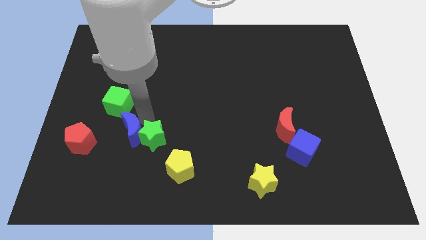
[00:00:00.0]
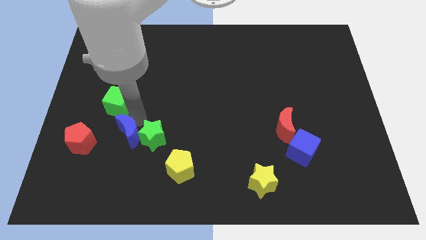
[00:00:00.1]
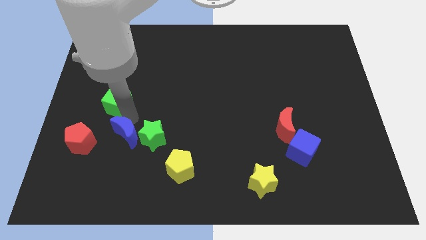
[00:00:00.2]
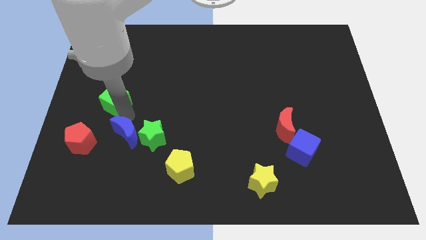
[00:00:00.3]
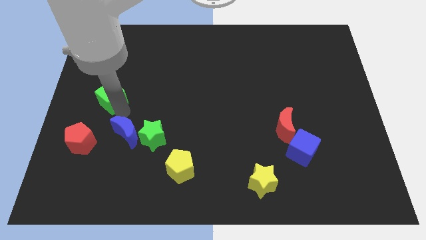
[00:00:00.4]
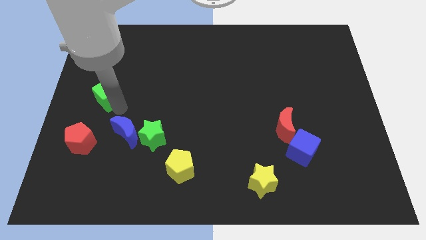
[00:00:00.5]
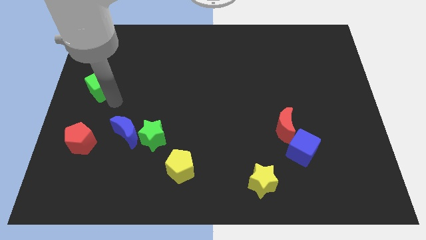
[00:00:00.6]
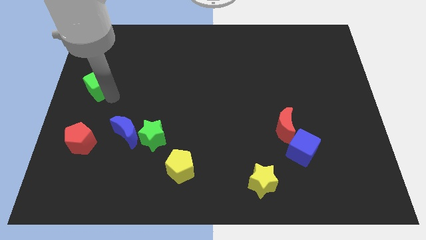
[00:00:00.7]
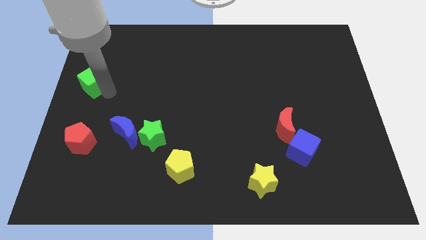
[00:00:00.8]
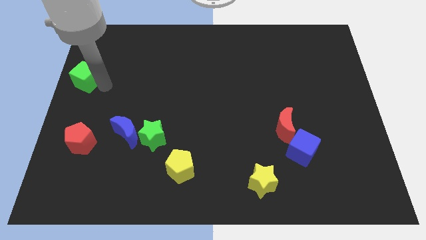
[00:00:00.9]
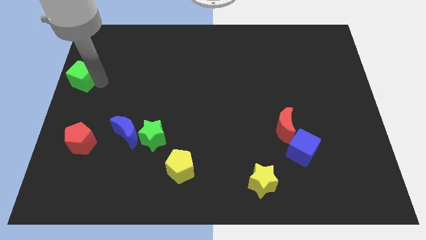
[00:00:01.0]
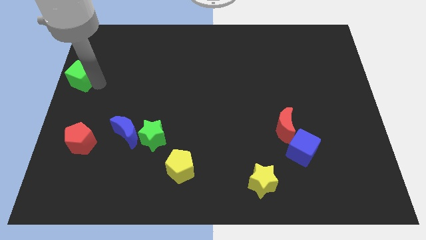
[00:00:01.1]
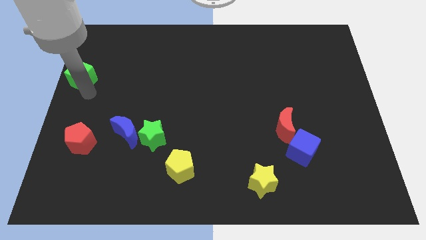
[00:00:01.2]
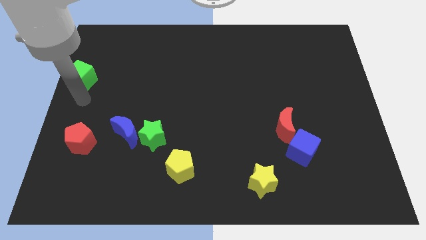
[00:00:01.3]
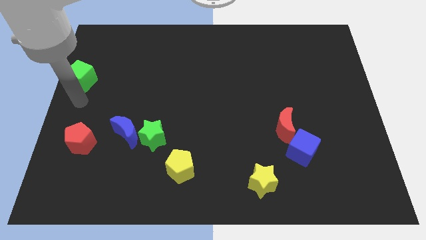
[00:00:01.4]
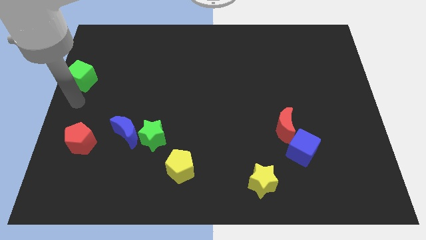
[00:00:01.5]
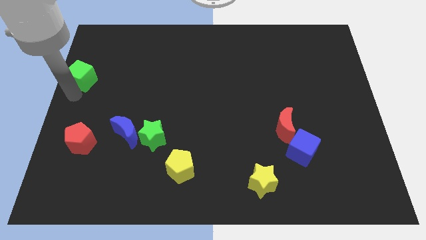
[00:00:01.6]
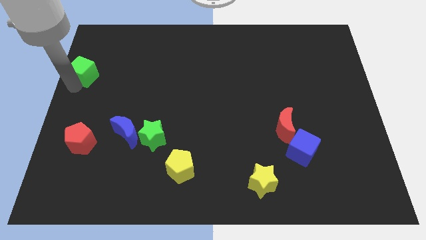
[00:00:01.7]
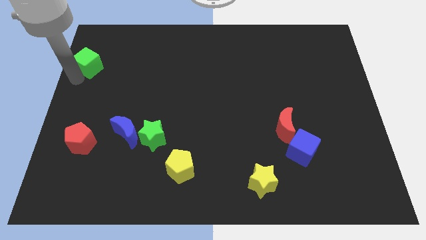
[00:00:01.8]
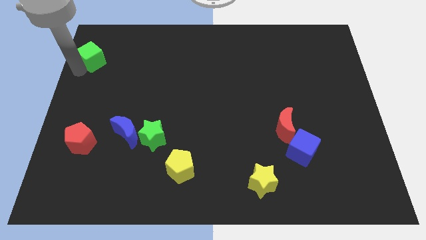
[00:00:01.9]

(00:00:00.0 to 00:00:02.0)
move the green cube vertically to the top of the red pentagon

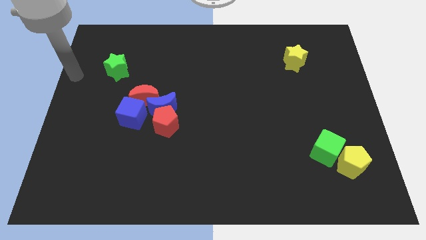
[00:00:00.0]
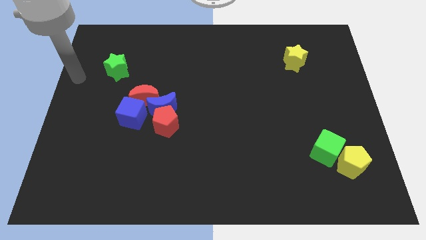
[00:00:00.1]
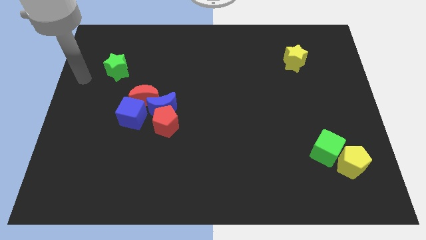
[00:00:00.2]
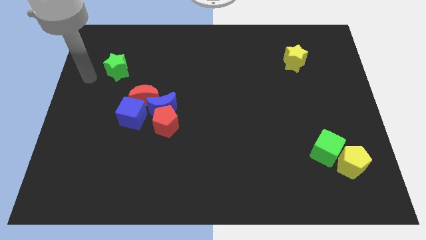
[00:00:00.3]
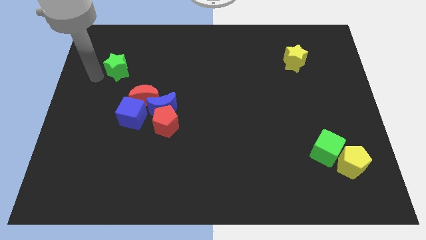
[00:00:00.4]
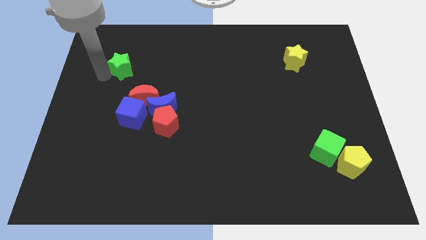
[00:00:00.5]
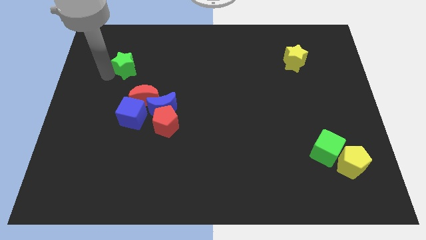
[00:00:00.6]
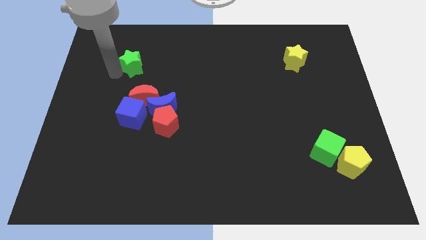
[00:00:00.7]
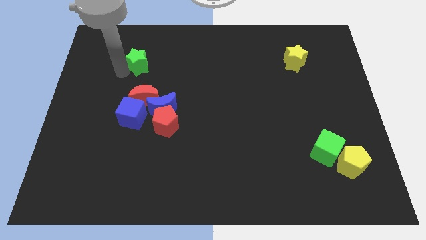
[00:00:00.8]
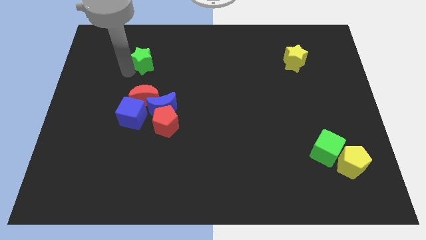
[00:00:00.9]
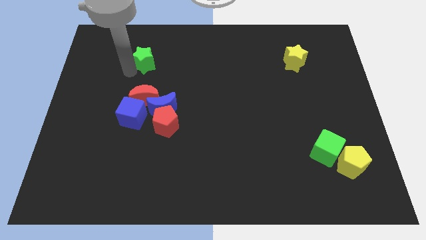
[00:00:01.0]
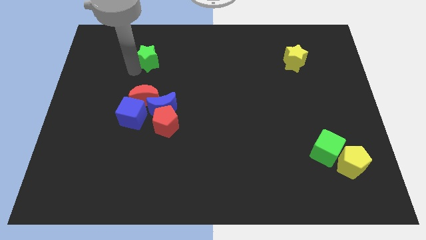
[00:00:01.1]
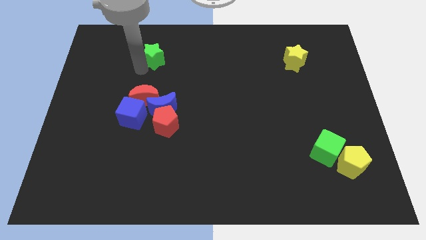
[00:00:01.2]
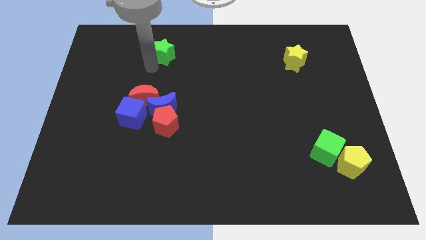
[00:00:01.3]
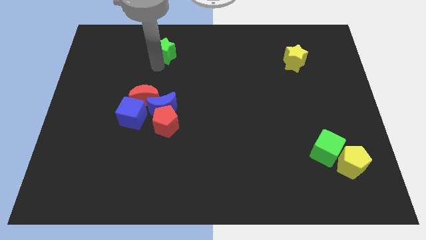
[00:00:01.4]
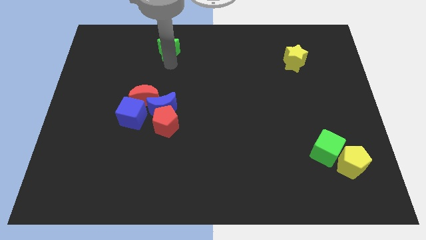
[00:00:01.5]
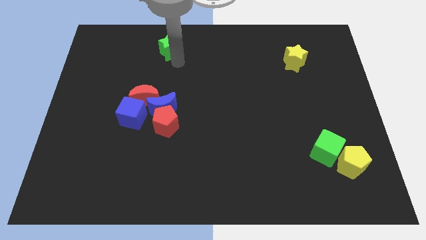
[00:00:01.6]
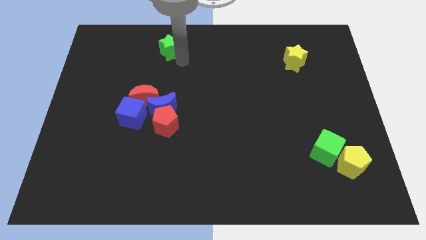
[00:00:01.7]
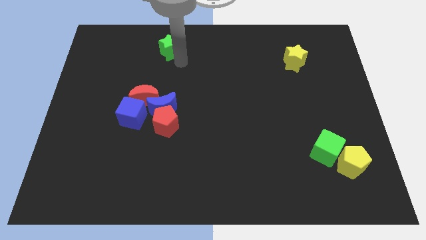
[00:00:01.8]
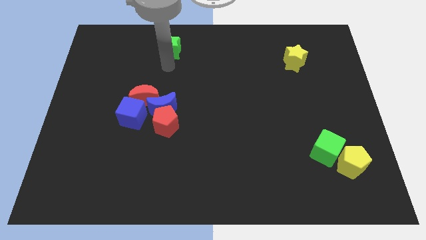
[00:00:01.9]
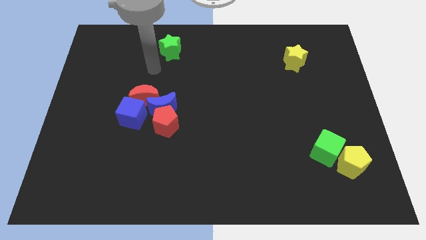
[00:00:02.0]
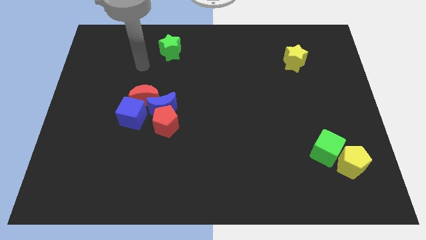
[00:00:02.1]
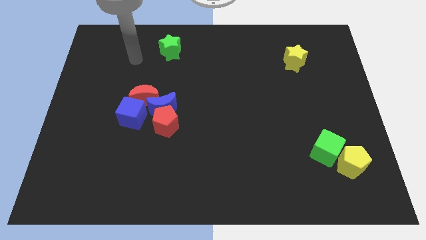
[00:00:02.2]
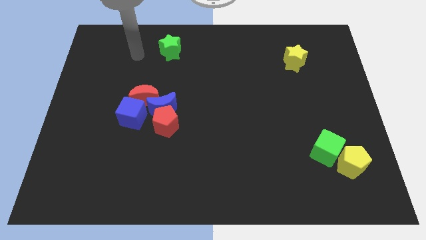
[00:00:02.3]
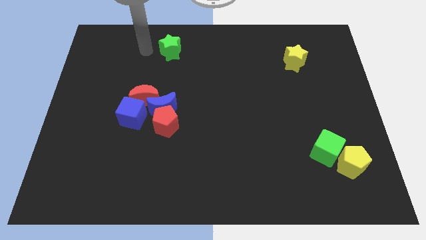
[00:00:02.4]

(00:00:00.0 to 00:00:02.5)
move green star to the top left

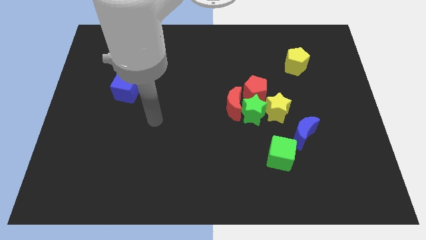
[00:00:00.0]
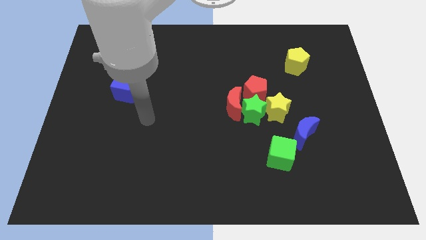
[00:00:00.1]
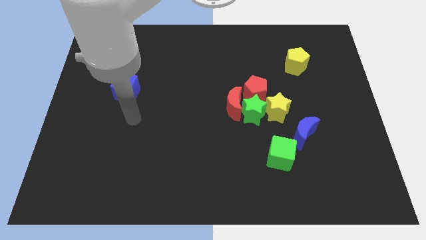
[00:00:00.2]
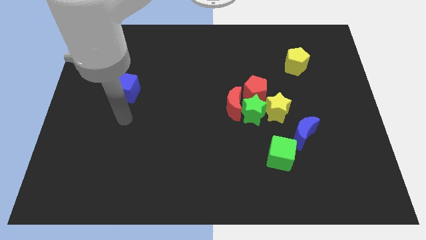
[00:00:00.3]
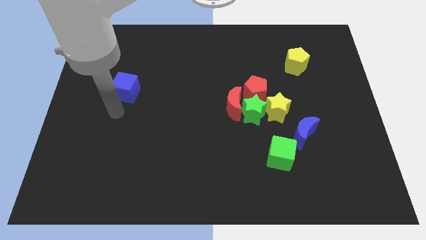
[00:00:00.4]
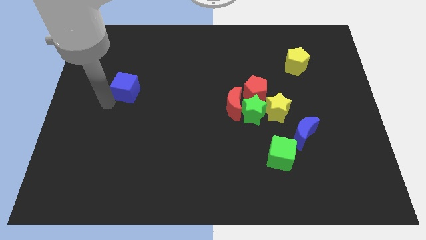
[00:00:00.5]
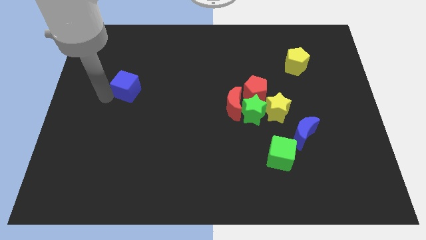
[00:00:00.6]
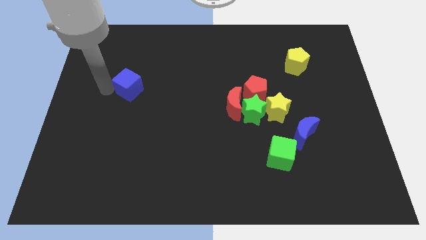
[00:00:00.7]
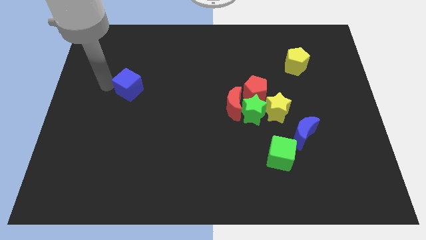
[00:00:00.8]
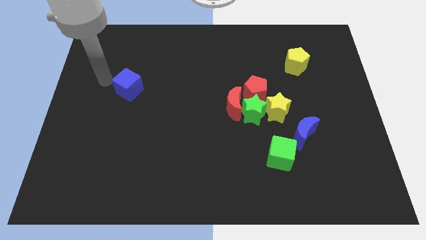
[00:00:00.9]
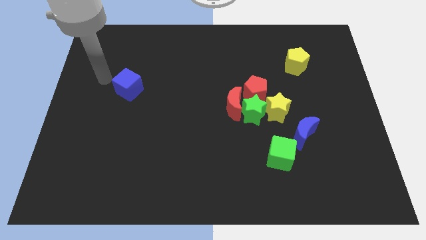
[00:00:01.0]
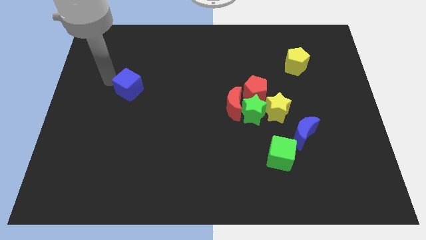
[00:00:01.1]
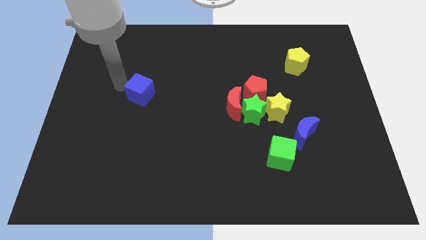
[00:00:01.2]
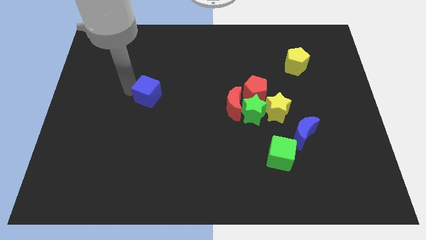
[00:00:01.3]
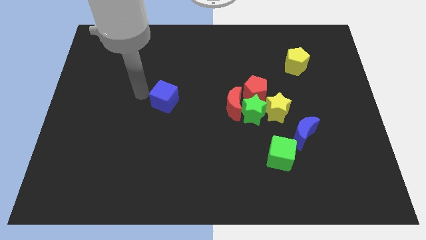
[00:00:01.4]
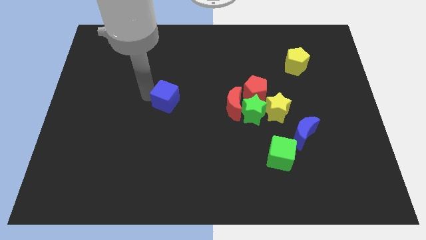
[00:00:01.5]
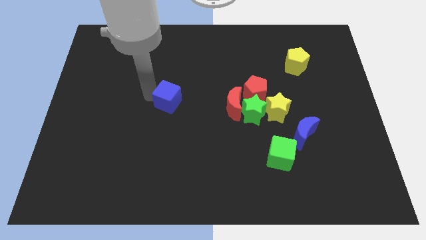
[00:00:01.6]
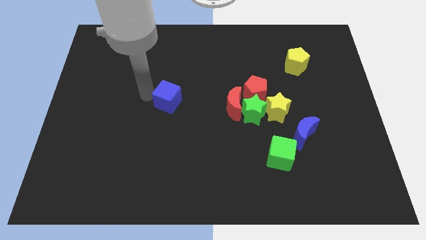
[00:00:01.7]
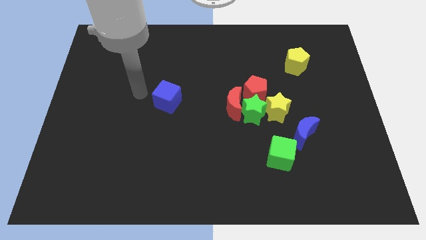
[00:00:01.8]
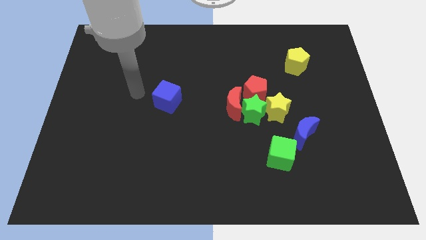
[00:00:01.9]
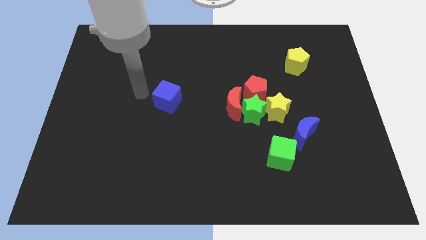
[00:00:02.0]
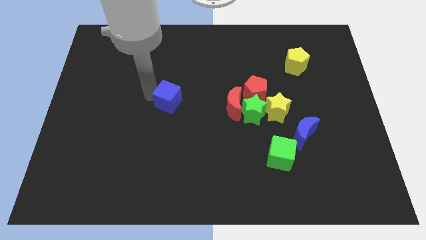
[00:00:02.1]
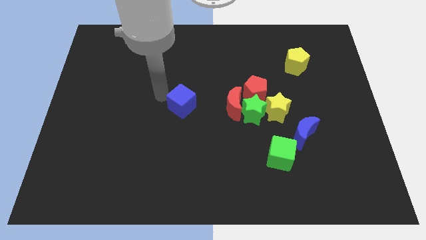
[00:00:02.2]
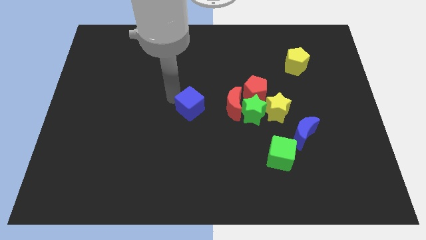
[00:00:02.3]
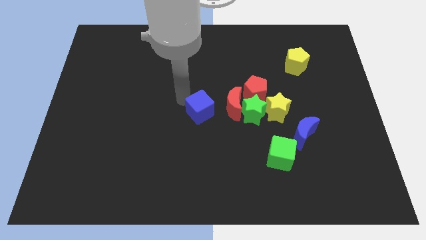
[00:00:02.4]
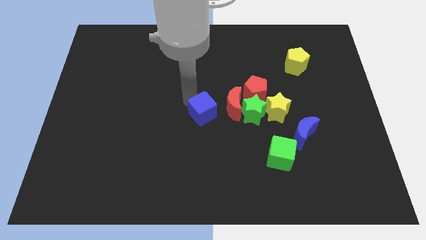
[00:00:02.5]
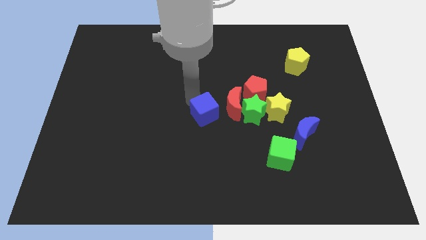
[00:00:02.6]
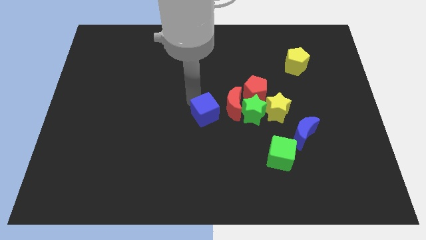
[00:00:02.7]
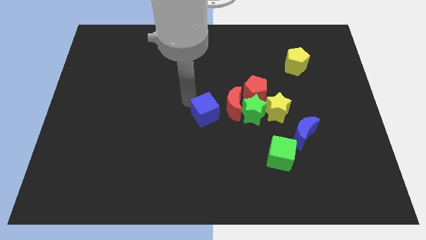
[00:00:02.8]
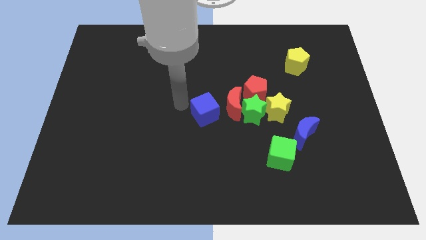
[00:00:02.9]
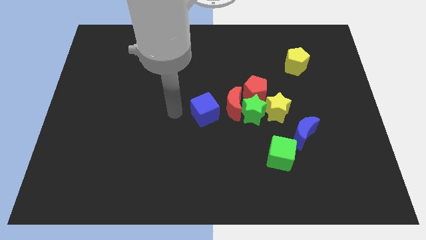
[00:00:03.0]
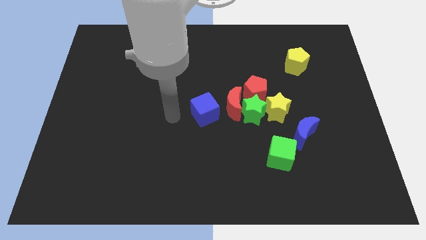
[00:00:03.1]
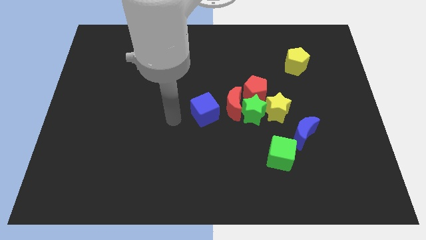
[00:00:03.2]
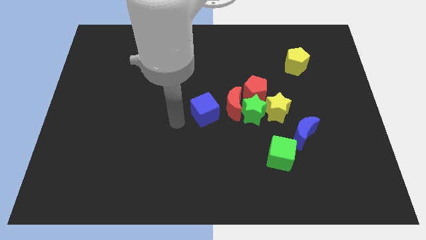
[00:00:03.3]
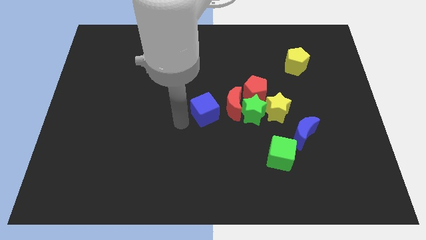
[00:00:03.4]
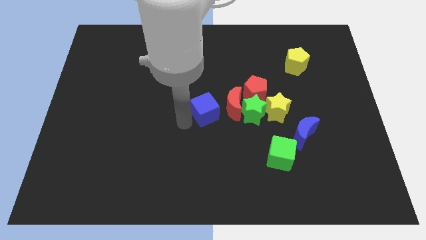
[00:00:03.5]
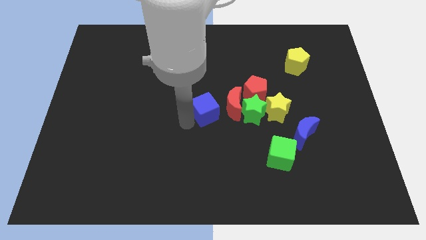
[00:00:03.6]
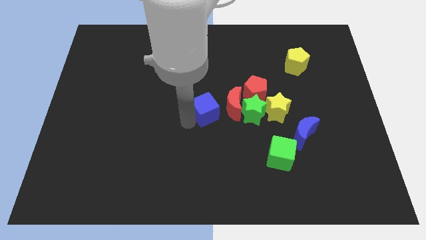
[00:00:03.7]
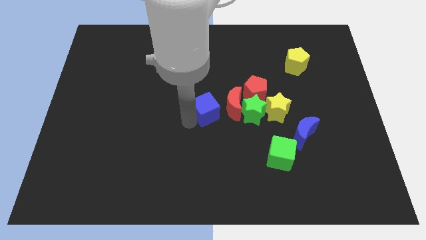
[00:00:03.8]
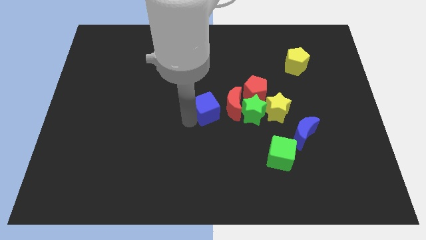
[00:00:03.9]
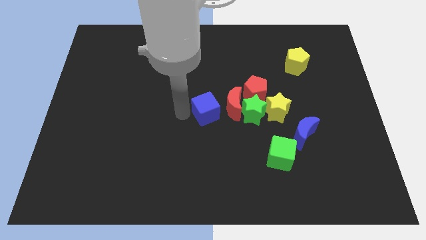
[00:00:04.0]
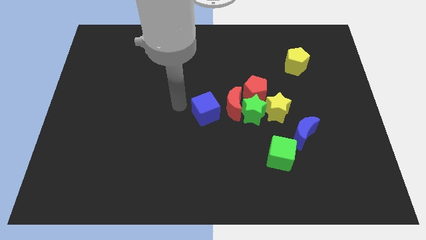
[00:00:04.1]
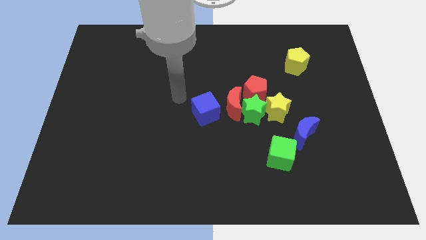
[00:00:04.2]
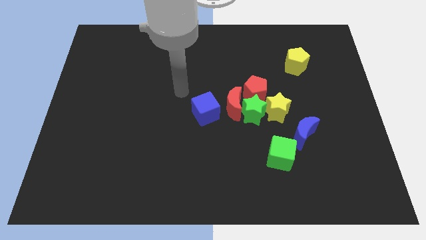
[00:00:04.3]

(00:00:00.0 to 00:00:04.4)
push the blue cube to the center of the board
